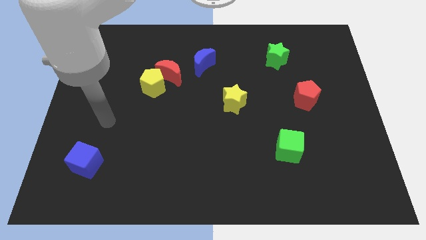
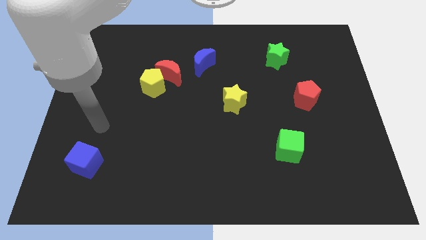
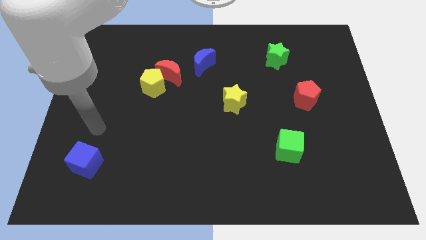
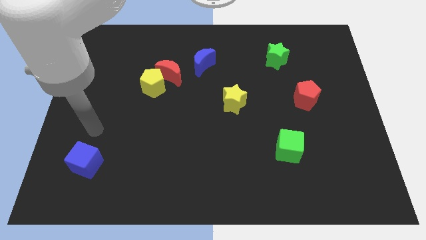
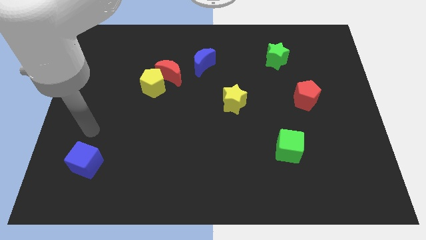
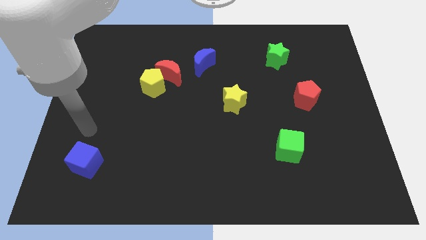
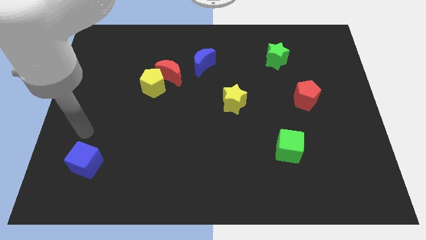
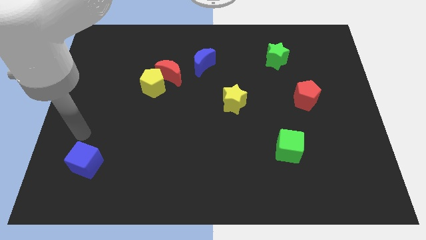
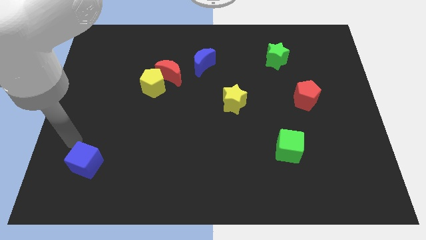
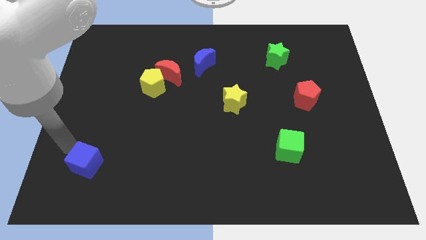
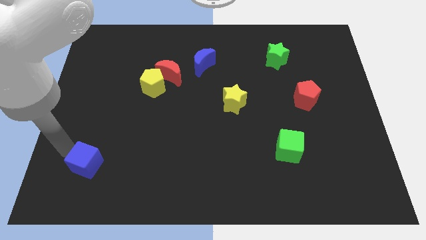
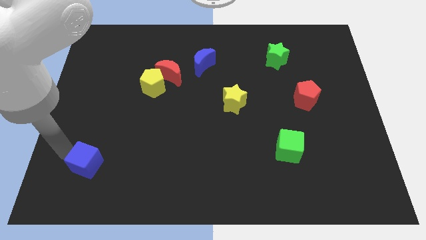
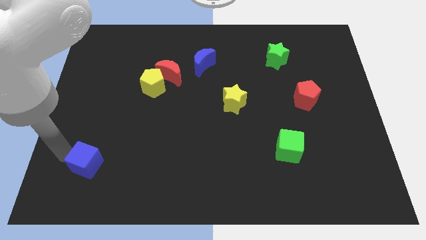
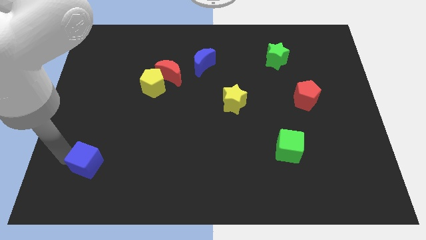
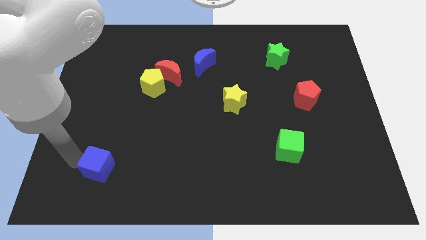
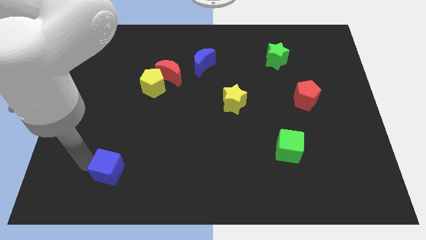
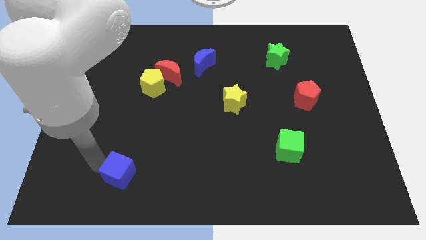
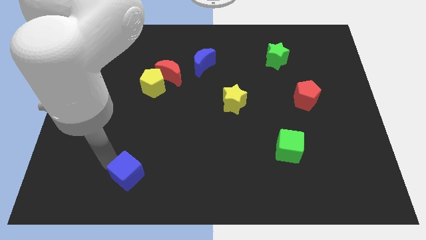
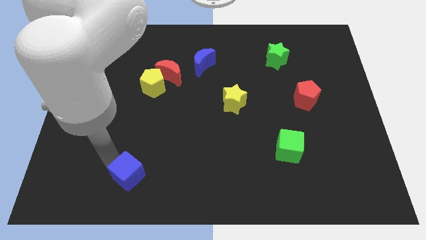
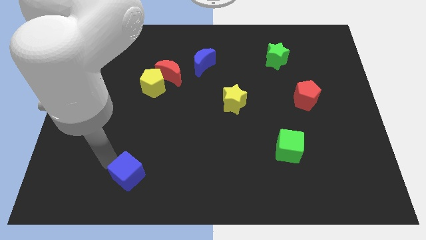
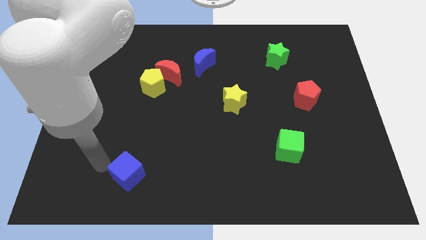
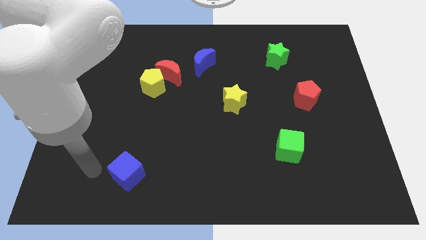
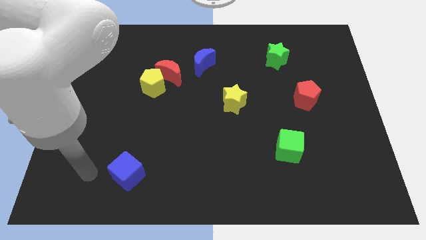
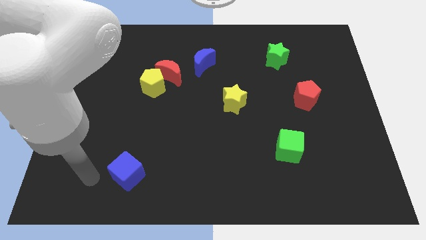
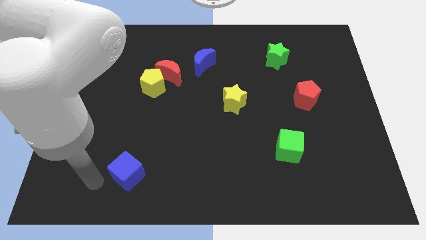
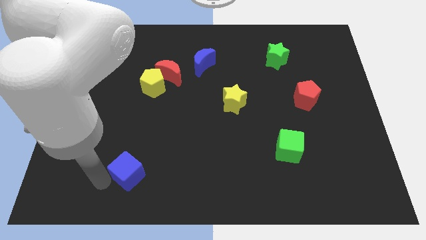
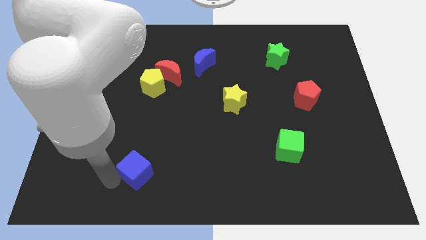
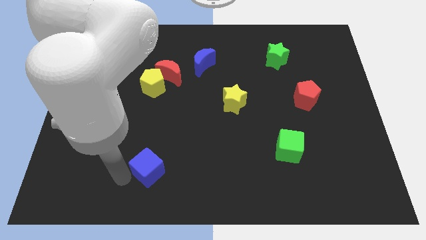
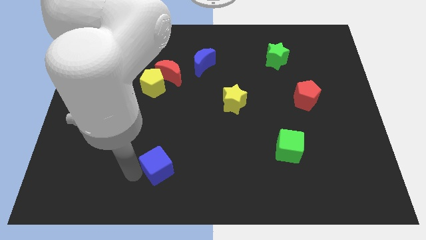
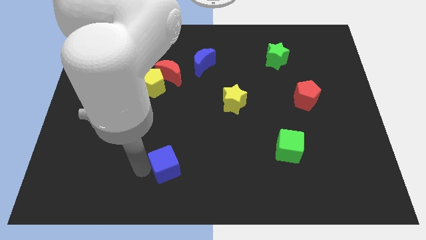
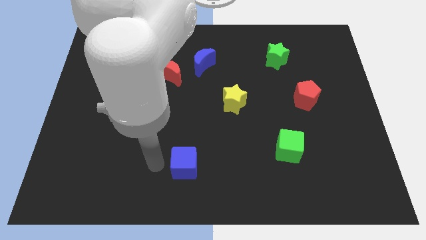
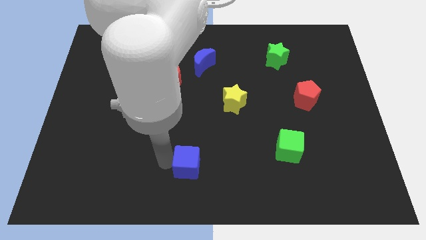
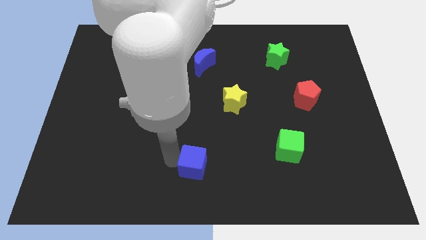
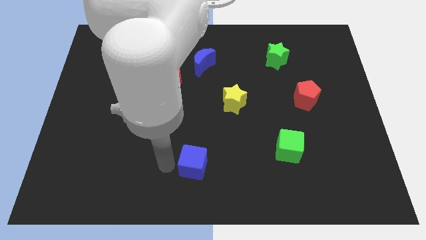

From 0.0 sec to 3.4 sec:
push the blue cube towards the right side of the board

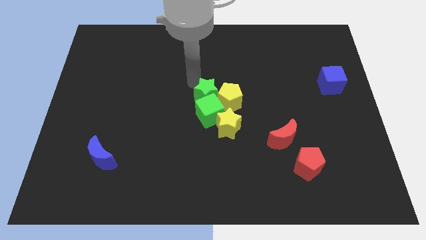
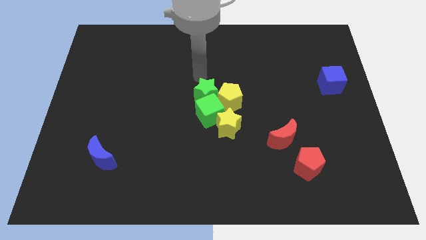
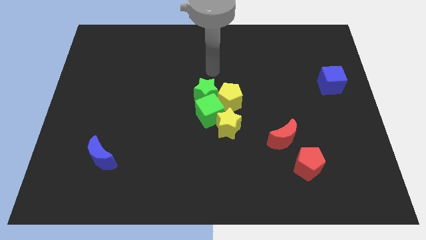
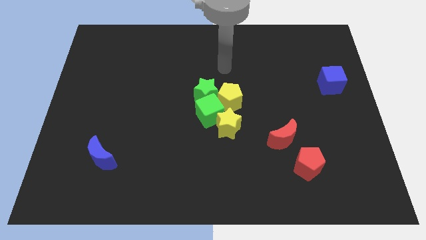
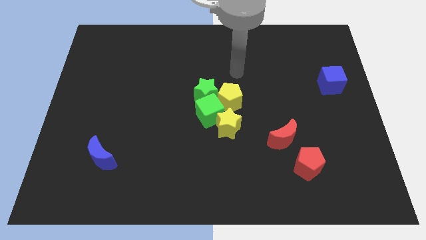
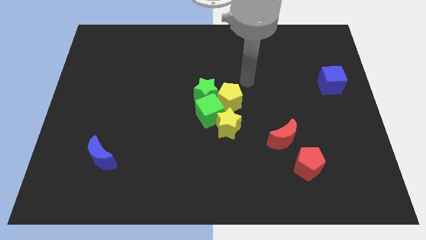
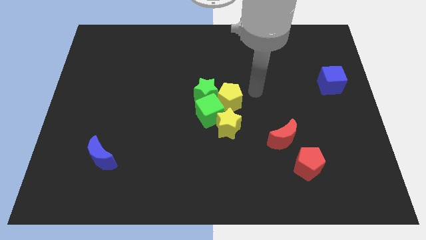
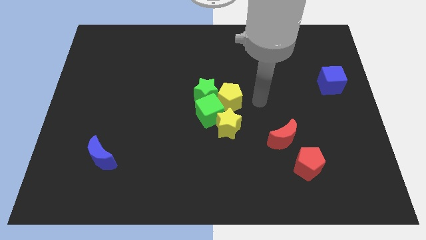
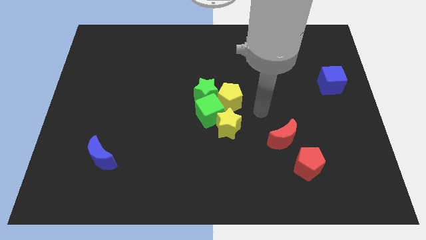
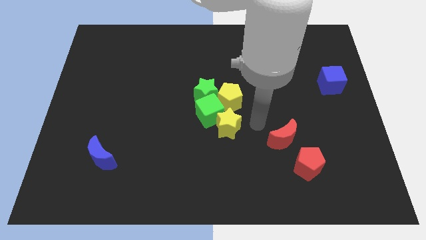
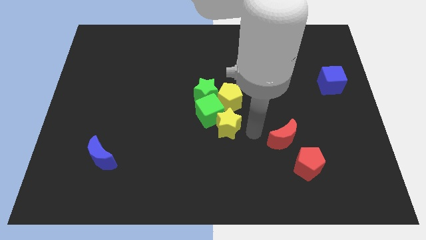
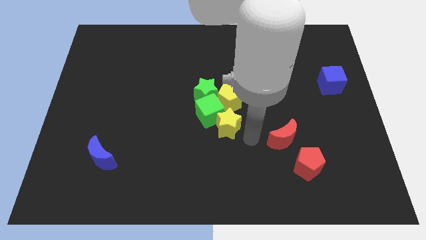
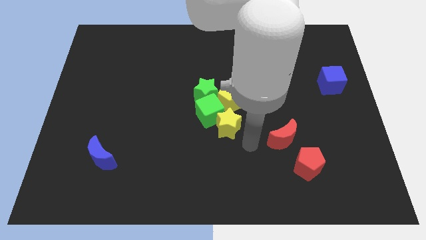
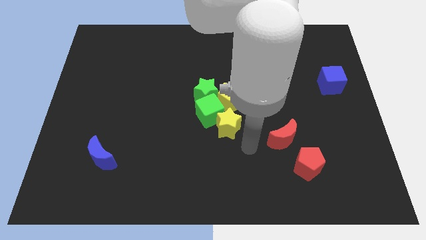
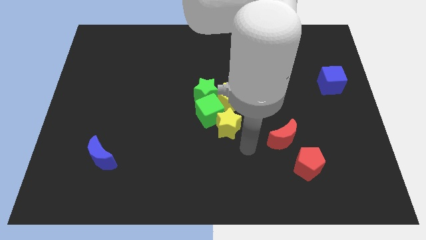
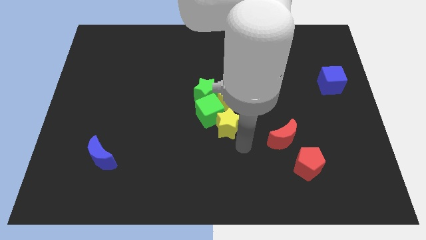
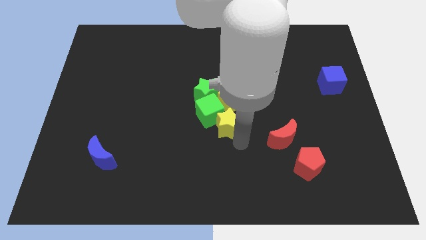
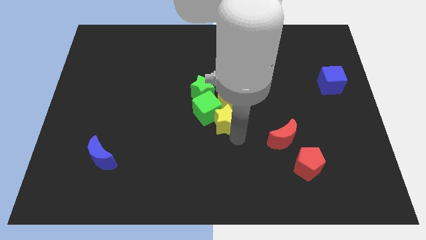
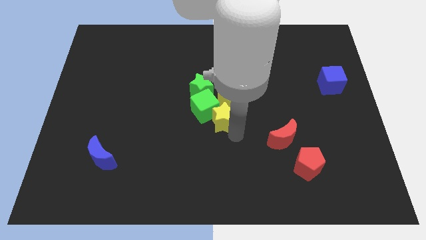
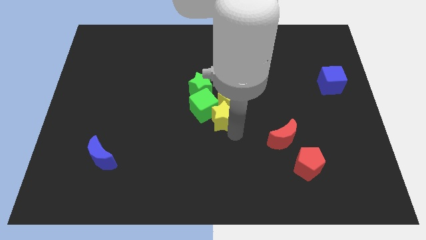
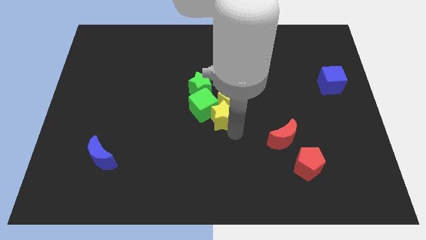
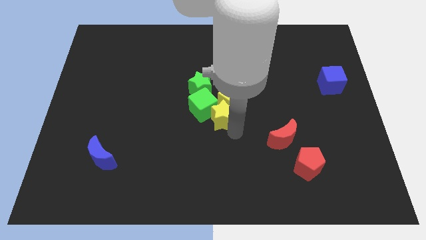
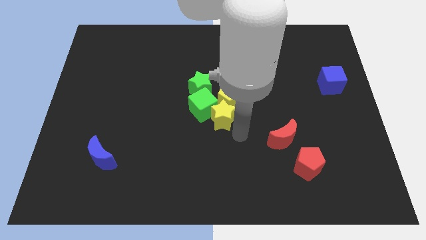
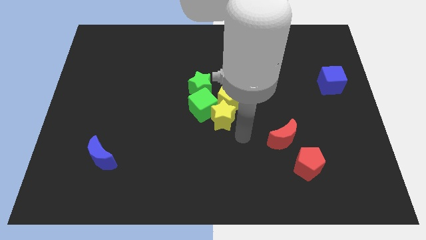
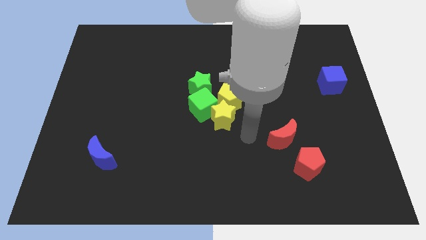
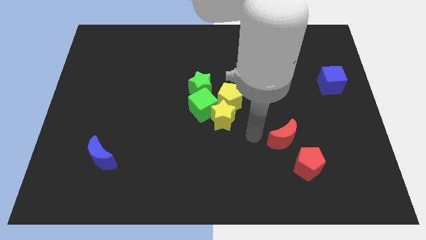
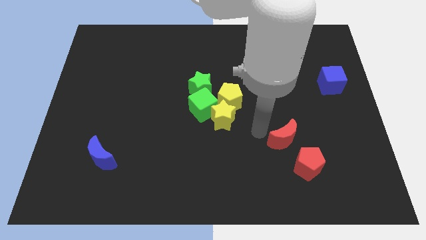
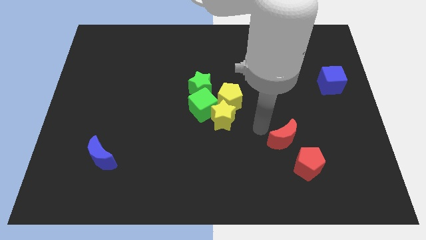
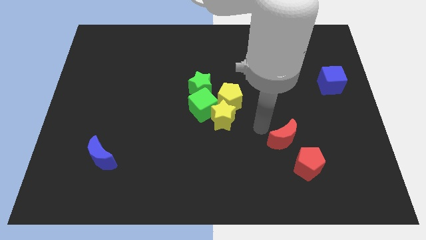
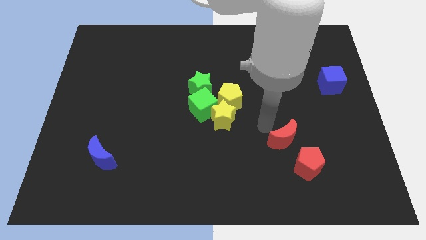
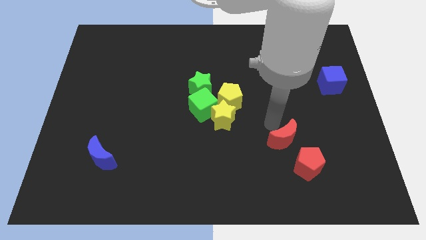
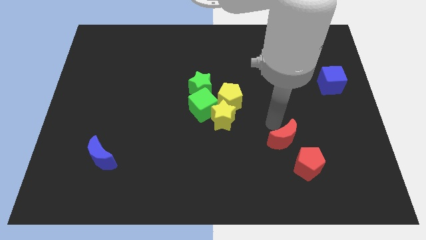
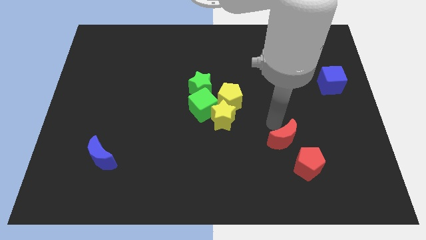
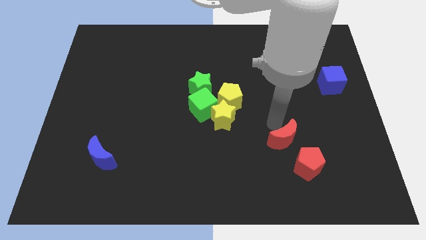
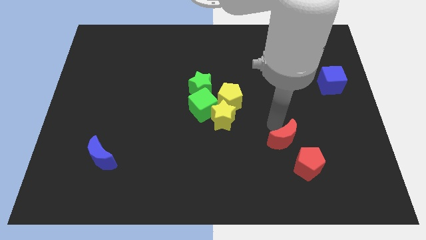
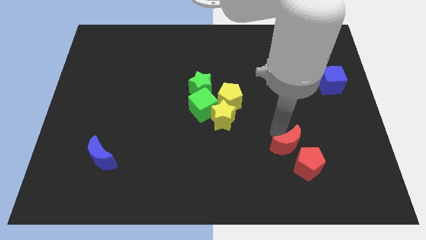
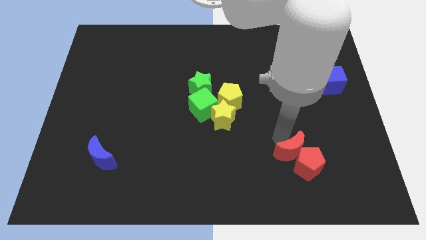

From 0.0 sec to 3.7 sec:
slightly push the yellow star into the green cube

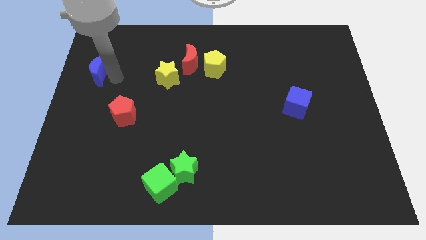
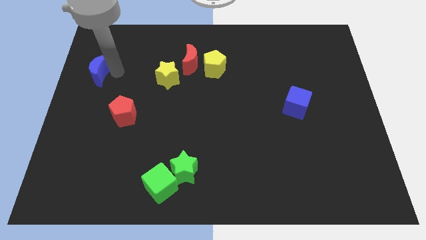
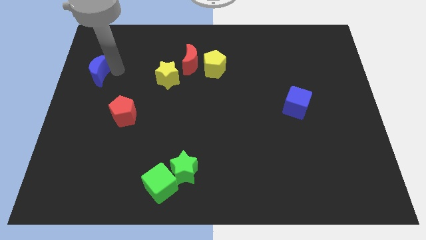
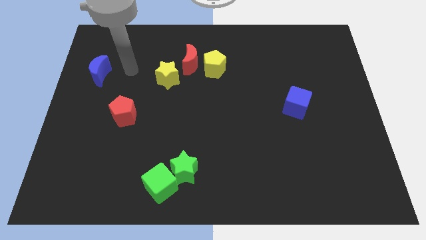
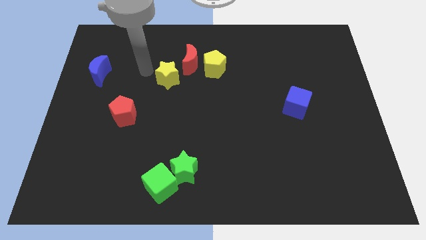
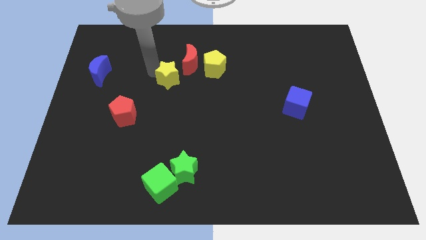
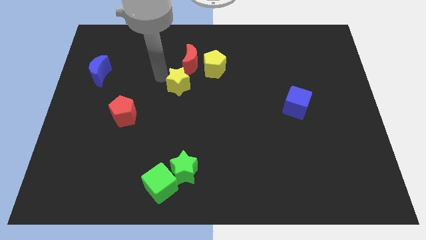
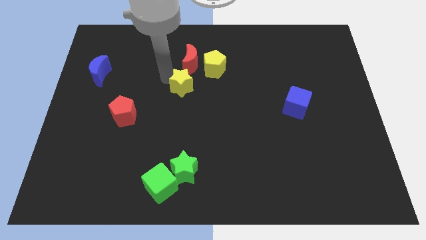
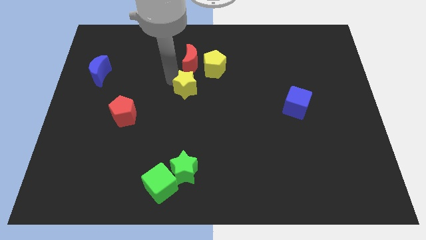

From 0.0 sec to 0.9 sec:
place the yellow star right to the red pentgaon

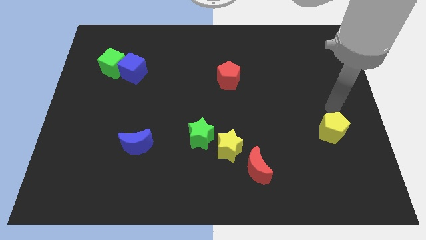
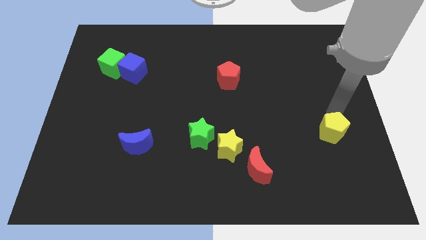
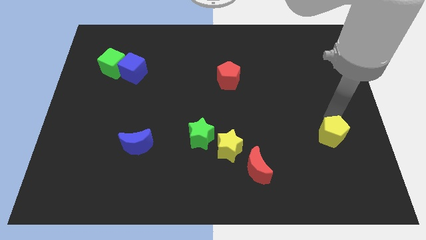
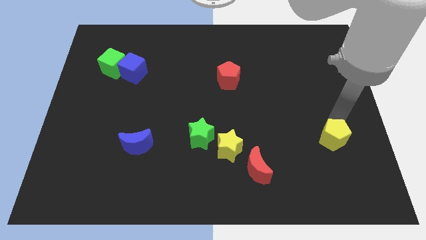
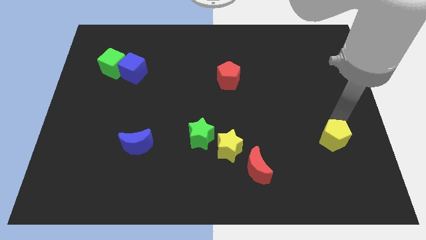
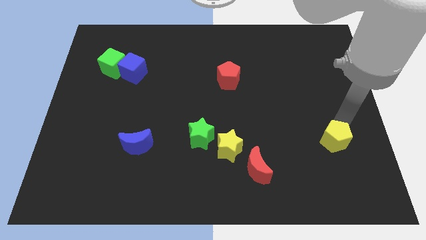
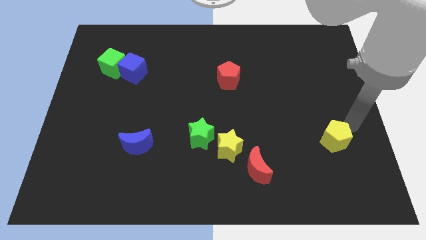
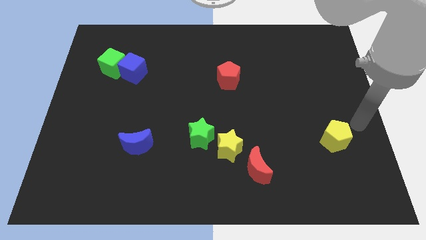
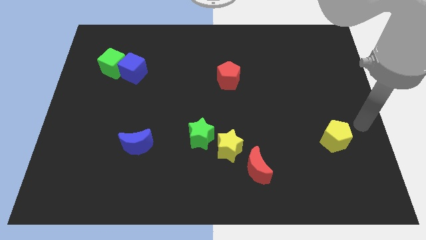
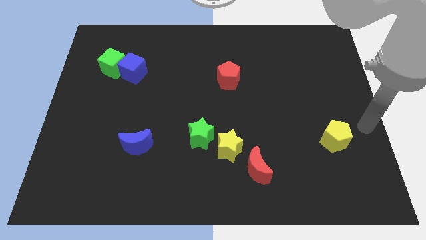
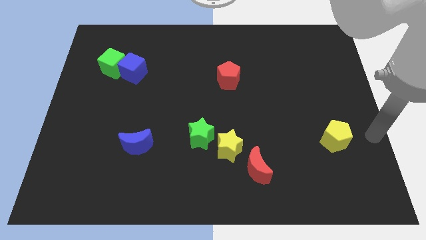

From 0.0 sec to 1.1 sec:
slide yellow pentagon slightly down
